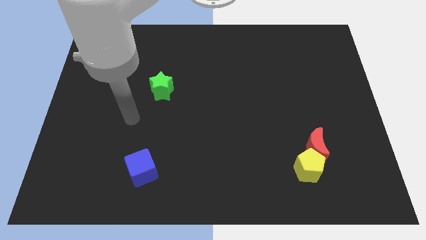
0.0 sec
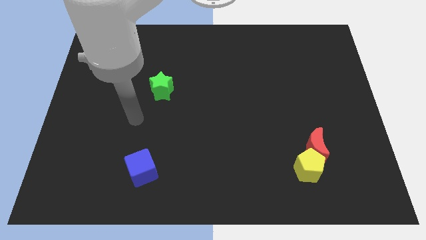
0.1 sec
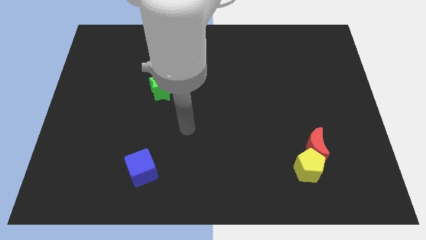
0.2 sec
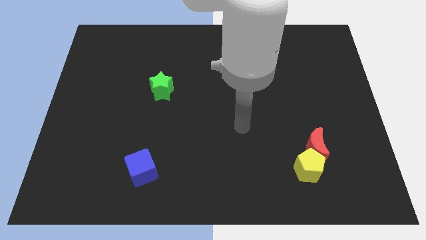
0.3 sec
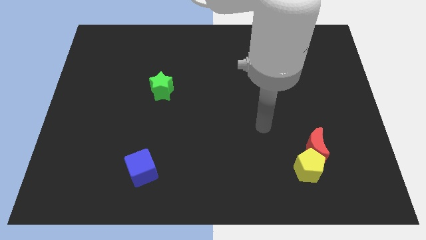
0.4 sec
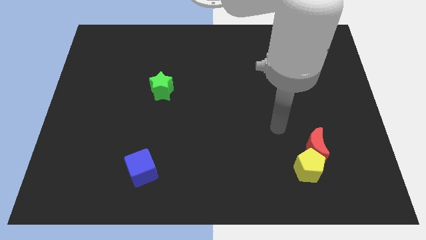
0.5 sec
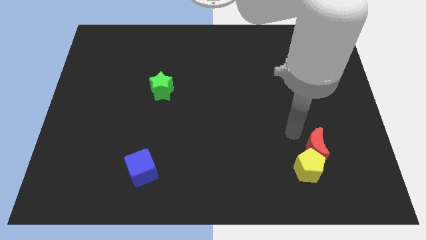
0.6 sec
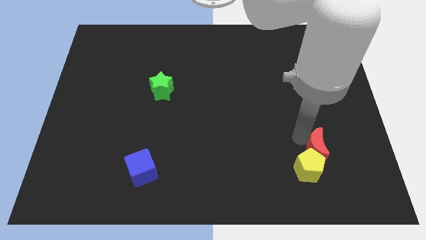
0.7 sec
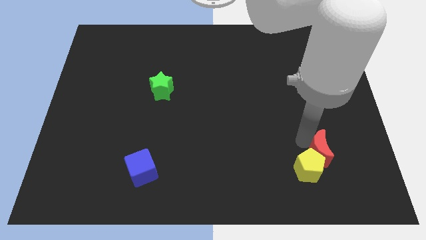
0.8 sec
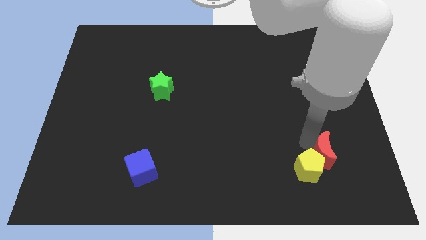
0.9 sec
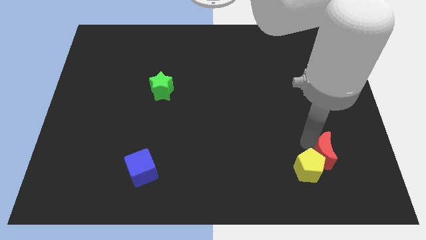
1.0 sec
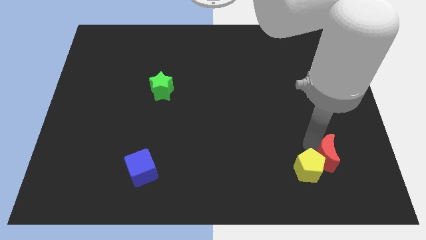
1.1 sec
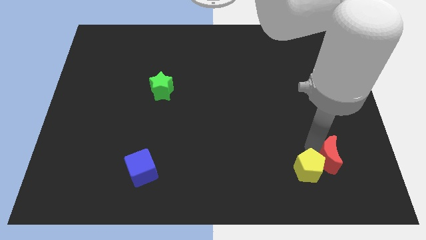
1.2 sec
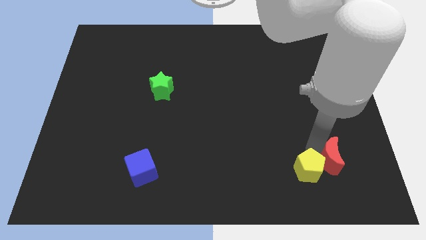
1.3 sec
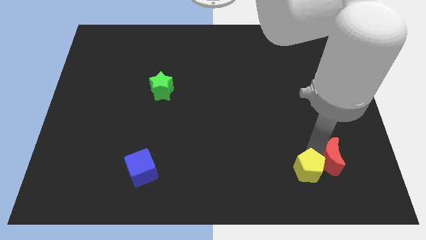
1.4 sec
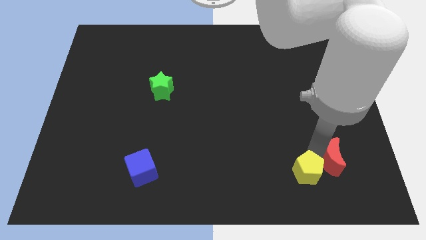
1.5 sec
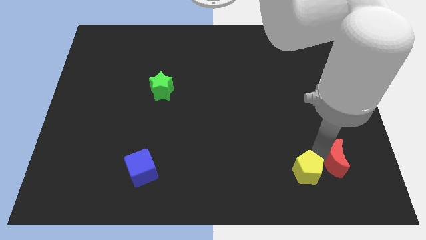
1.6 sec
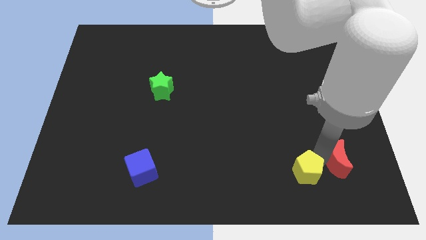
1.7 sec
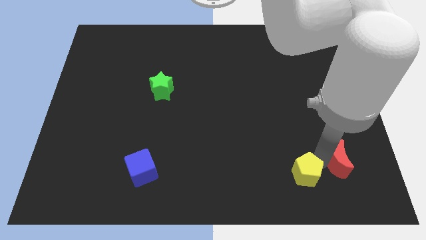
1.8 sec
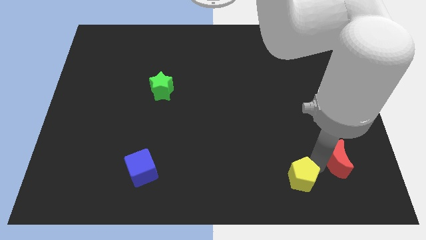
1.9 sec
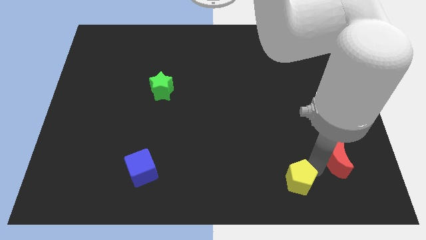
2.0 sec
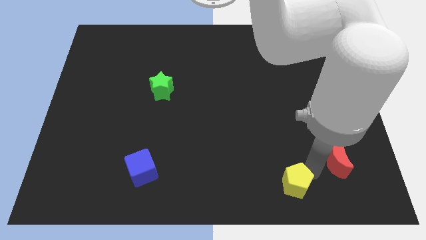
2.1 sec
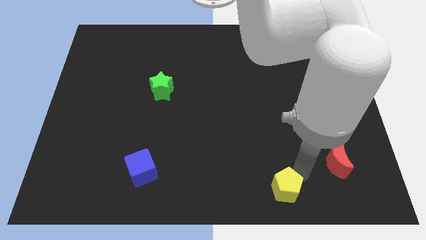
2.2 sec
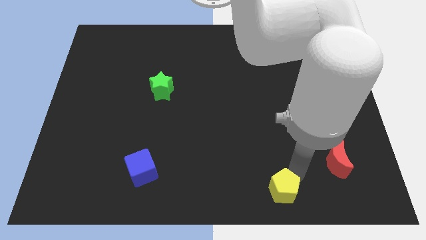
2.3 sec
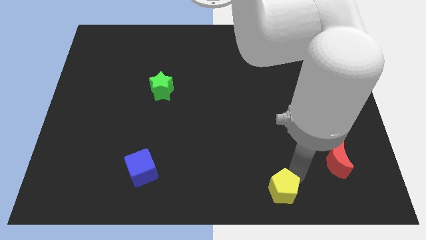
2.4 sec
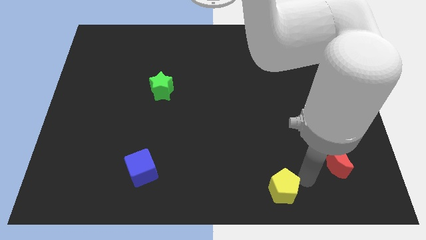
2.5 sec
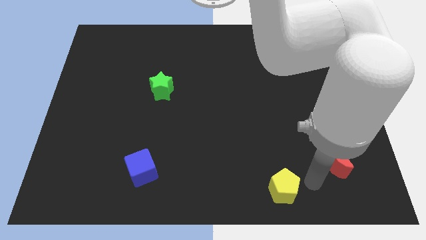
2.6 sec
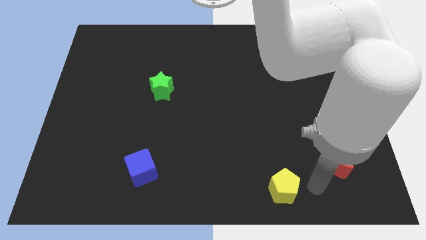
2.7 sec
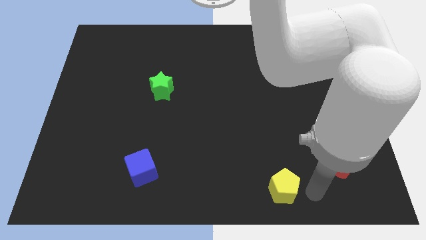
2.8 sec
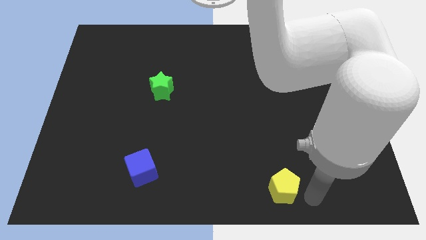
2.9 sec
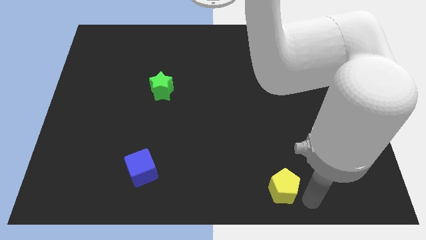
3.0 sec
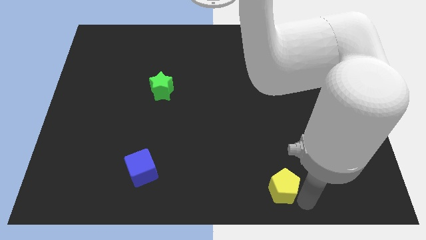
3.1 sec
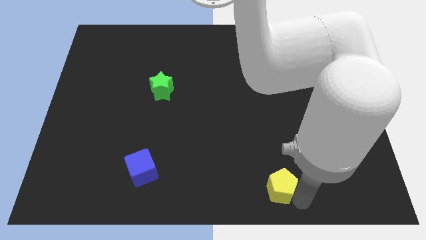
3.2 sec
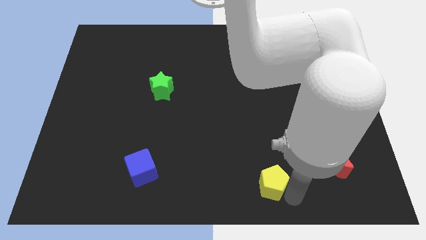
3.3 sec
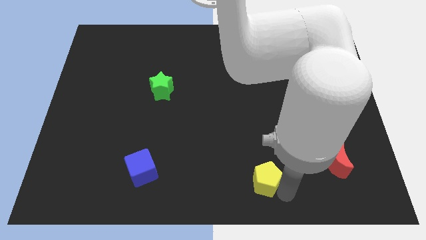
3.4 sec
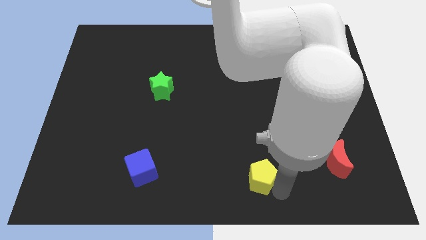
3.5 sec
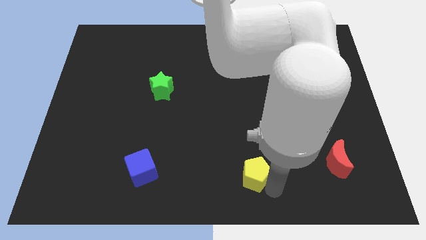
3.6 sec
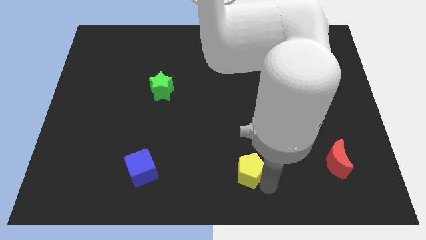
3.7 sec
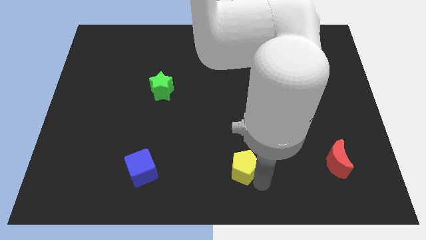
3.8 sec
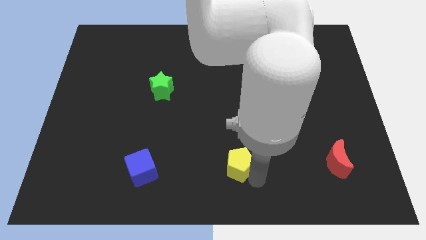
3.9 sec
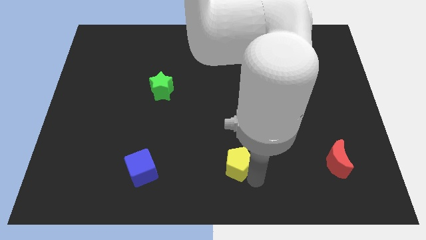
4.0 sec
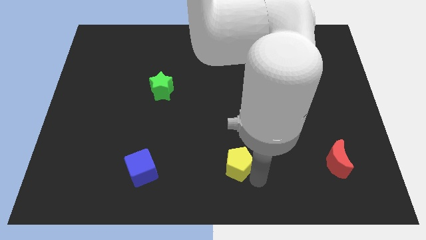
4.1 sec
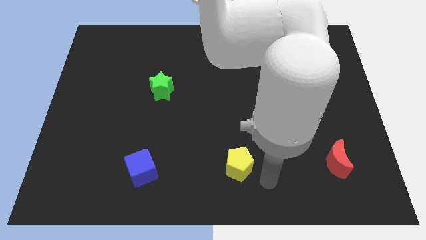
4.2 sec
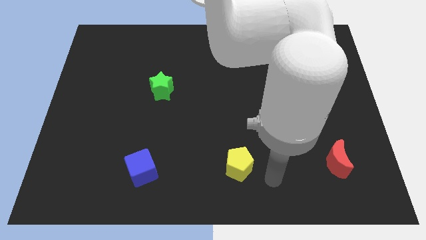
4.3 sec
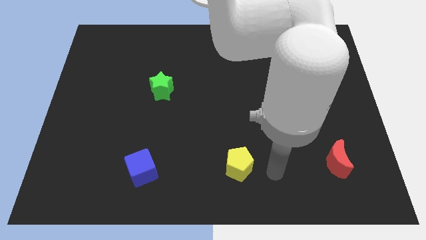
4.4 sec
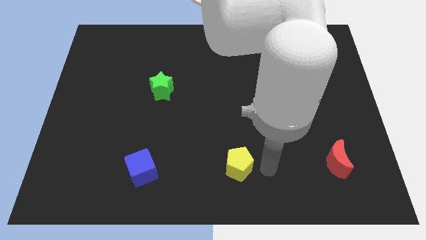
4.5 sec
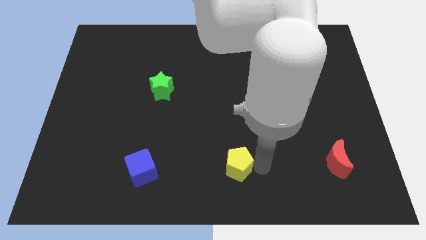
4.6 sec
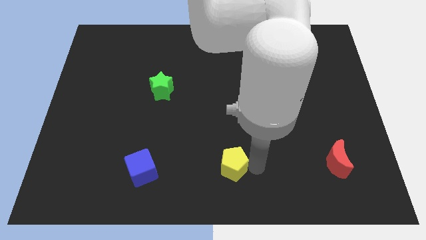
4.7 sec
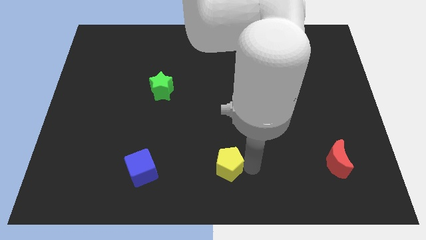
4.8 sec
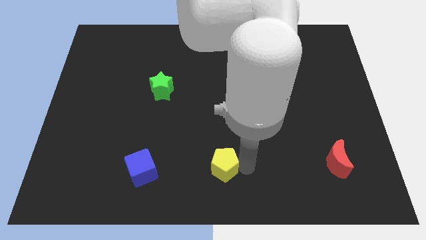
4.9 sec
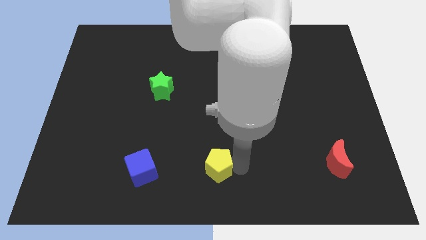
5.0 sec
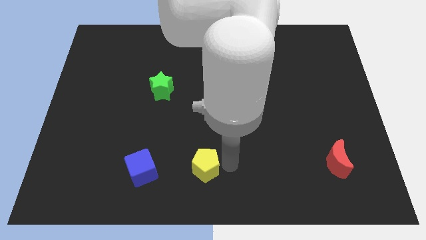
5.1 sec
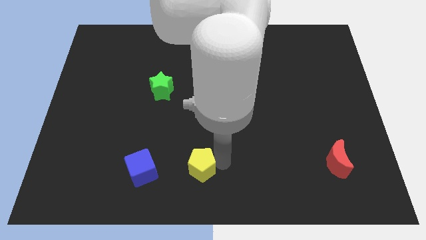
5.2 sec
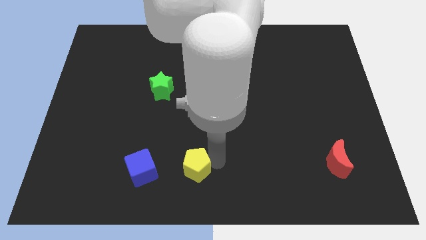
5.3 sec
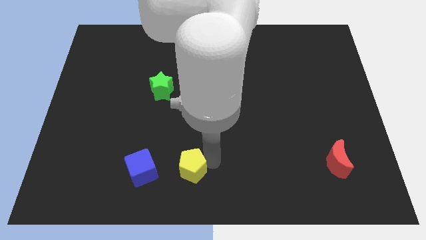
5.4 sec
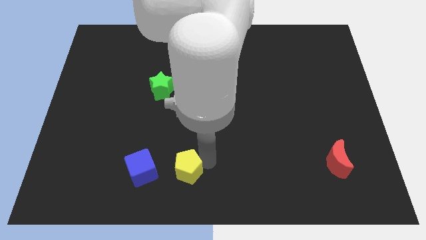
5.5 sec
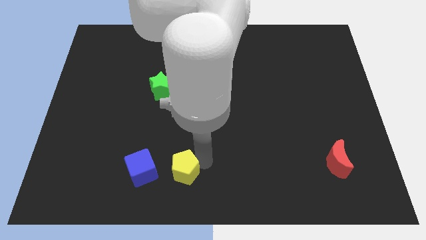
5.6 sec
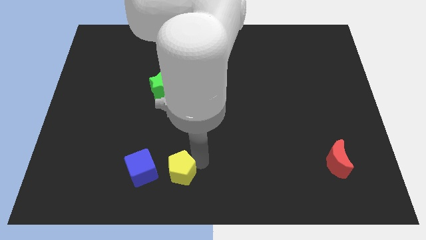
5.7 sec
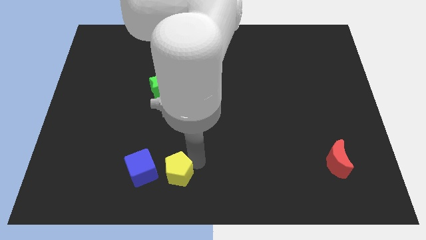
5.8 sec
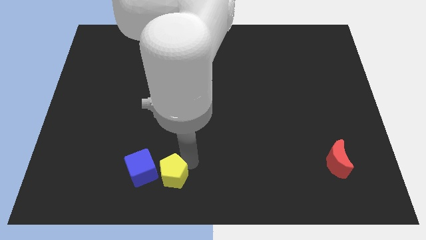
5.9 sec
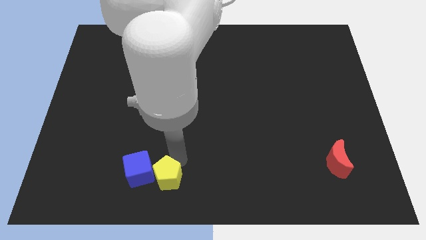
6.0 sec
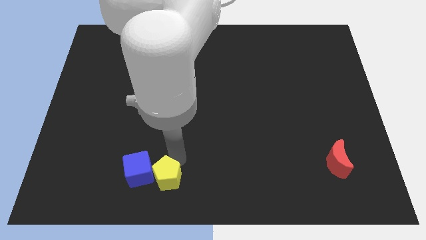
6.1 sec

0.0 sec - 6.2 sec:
put the pentagon to the cube

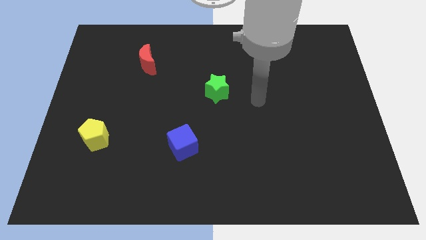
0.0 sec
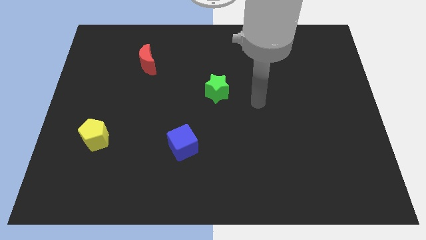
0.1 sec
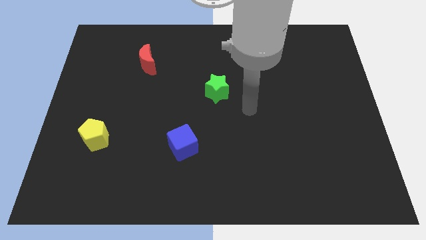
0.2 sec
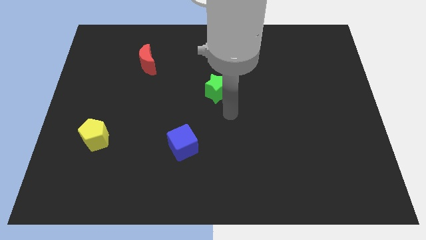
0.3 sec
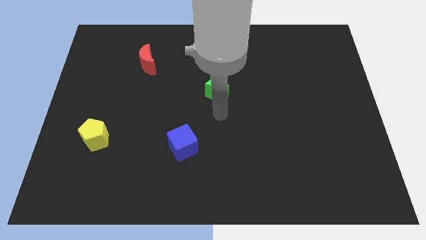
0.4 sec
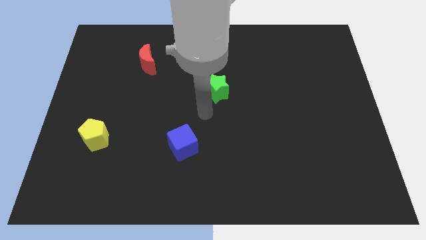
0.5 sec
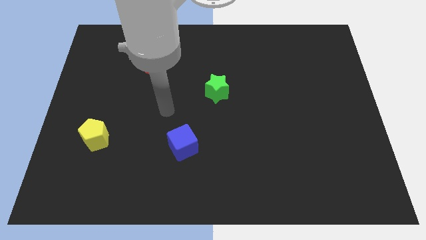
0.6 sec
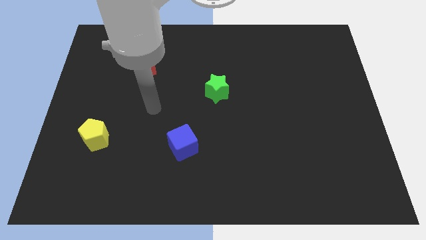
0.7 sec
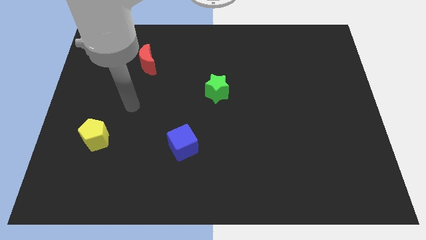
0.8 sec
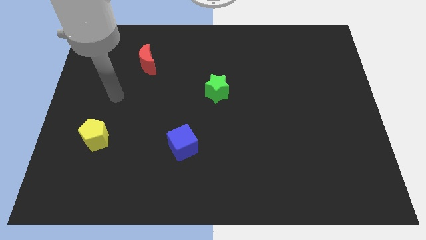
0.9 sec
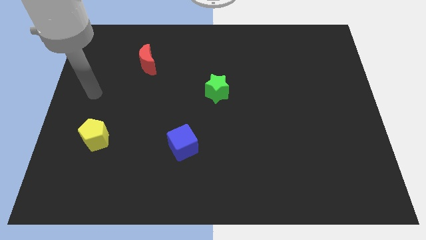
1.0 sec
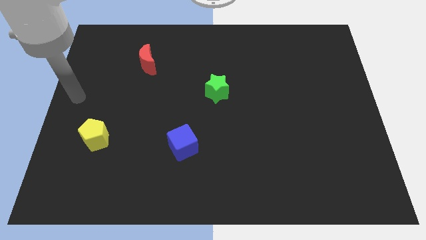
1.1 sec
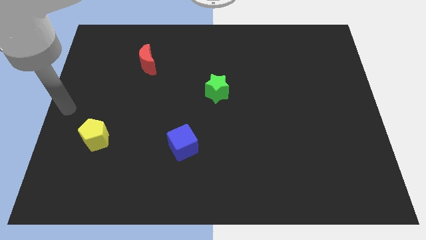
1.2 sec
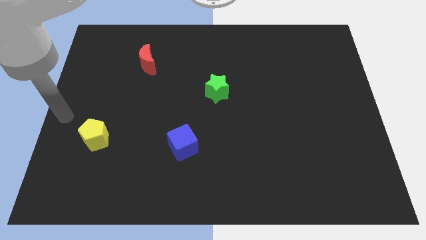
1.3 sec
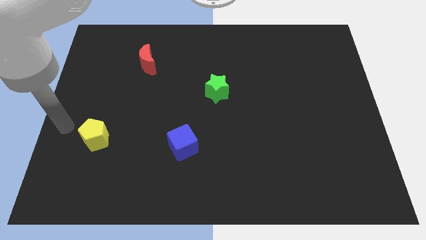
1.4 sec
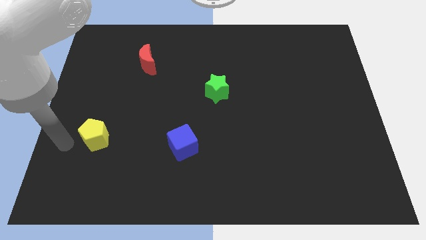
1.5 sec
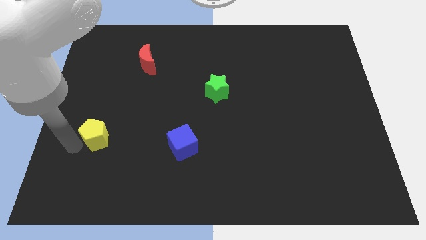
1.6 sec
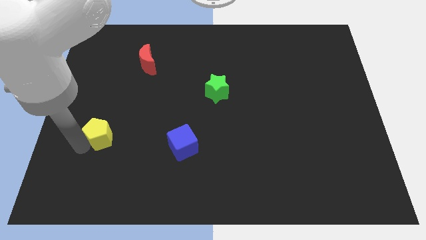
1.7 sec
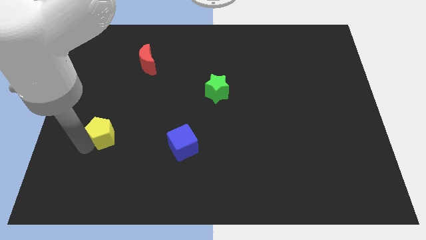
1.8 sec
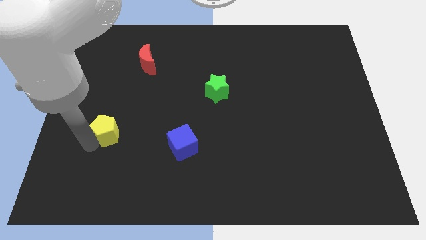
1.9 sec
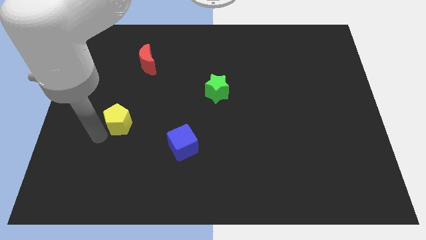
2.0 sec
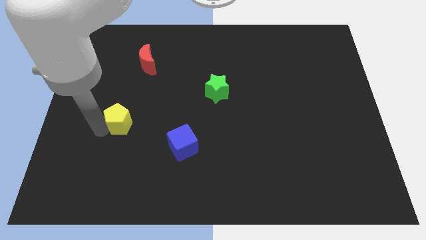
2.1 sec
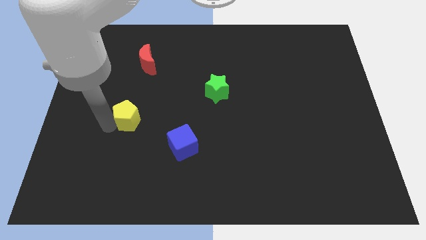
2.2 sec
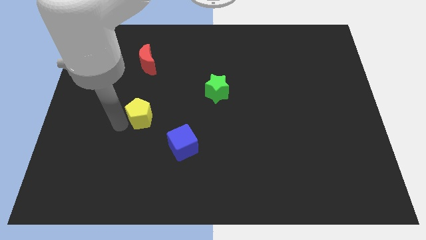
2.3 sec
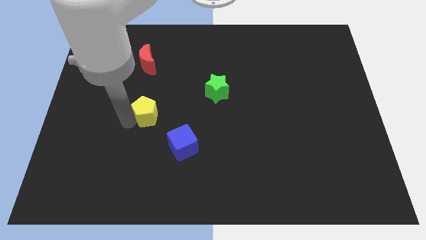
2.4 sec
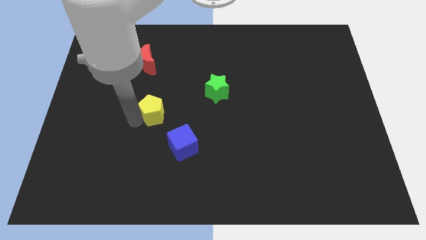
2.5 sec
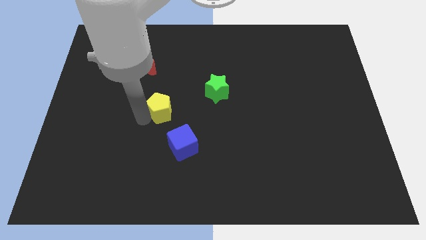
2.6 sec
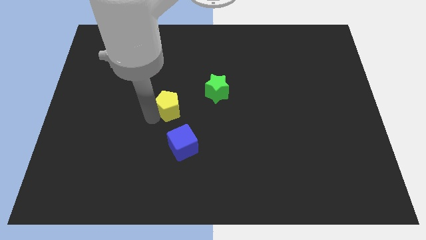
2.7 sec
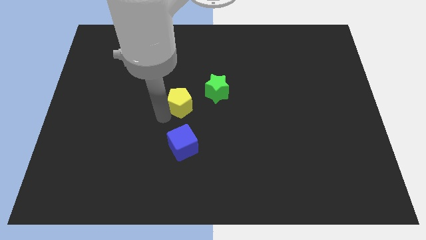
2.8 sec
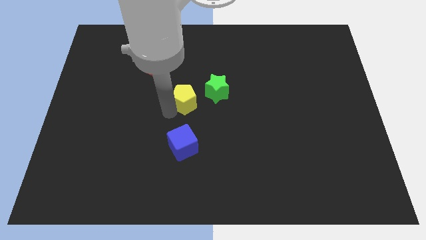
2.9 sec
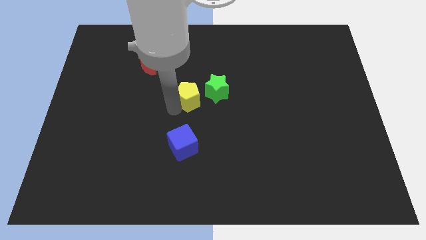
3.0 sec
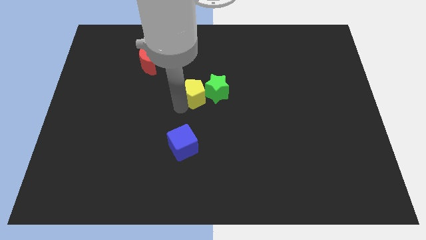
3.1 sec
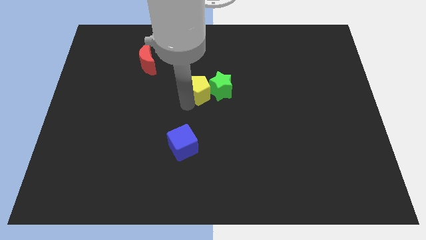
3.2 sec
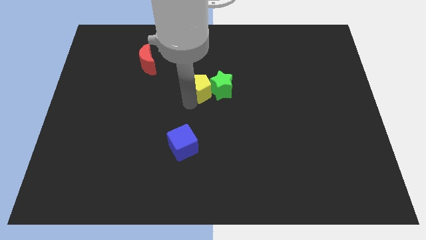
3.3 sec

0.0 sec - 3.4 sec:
move the yellow pentagon to the green block
